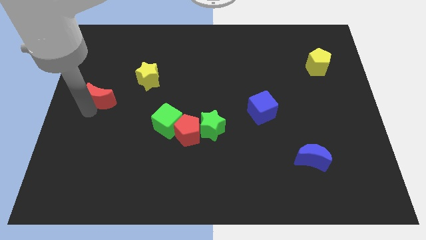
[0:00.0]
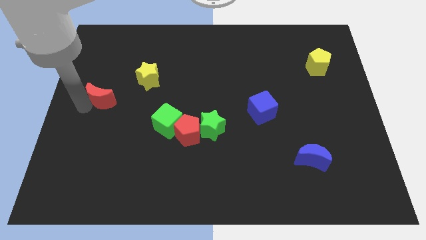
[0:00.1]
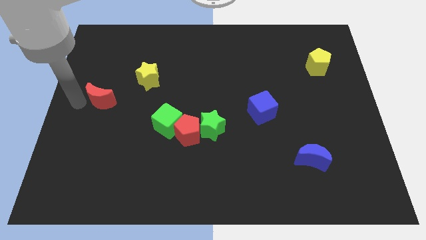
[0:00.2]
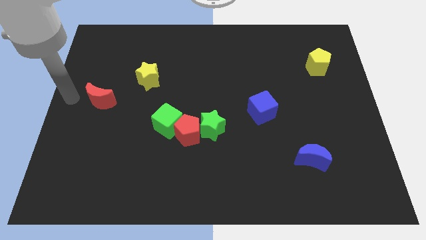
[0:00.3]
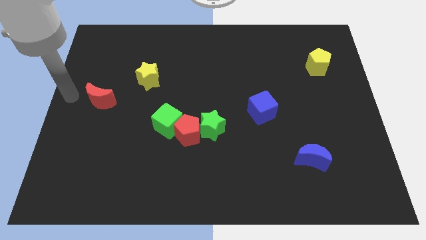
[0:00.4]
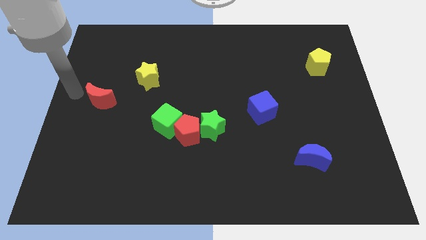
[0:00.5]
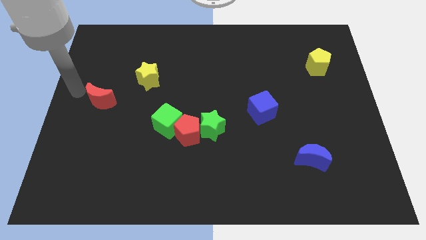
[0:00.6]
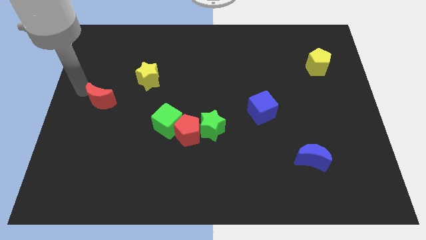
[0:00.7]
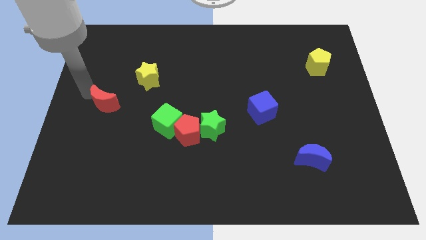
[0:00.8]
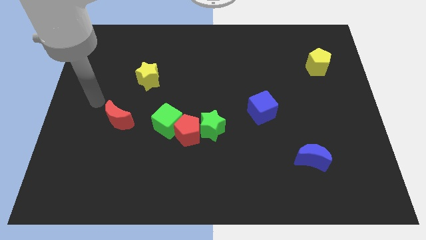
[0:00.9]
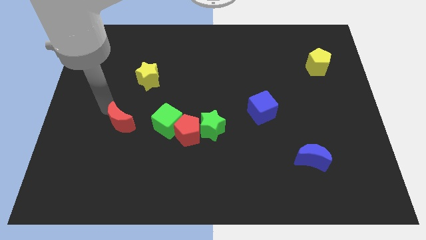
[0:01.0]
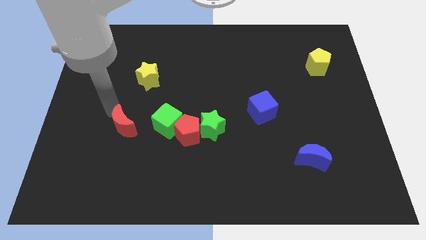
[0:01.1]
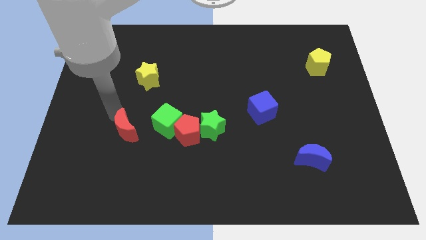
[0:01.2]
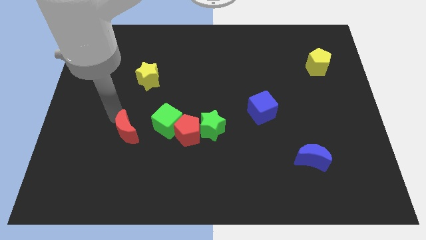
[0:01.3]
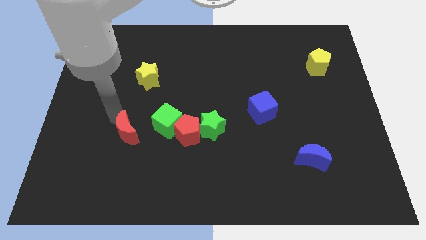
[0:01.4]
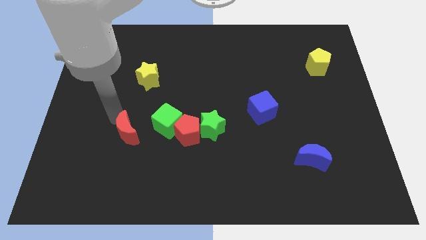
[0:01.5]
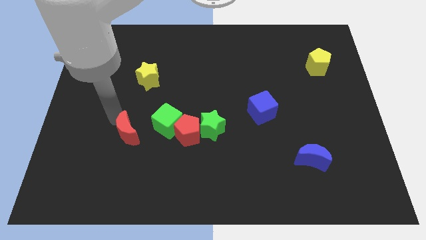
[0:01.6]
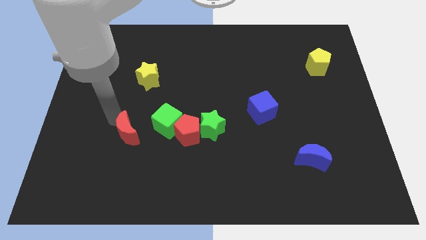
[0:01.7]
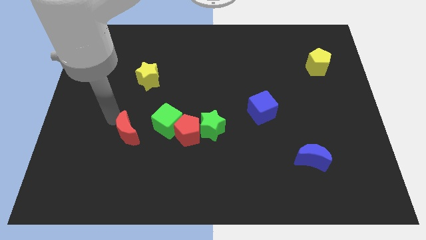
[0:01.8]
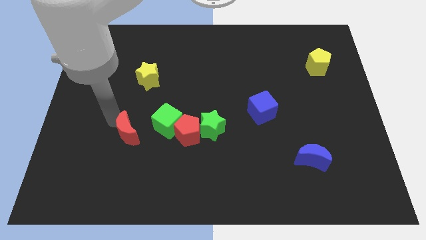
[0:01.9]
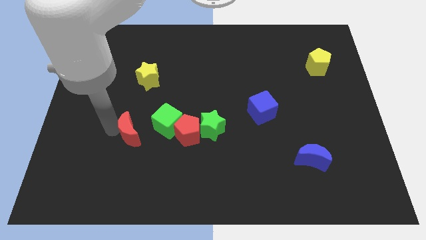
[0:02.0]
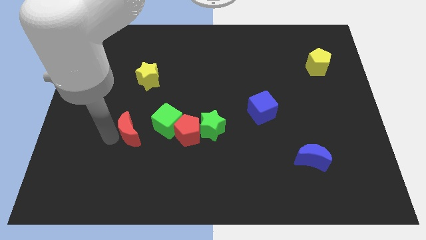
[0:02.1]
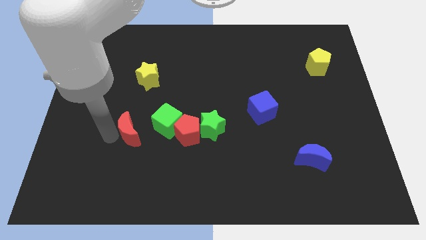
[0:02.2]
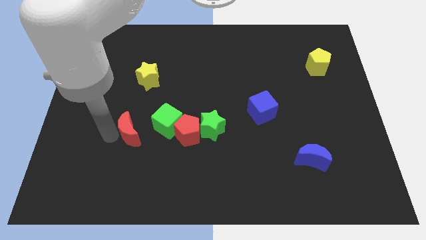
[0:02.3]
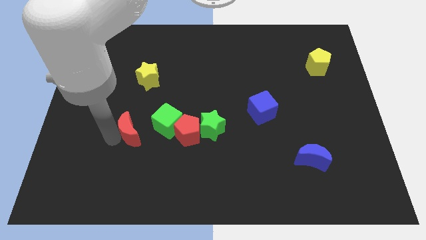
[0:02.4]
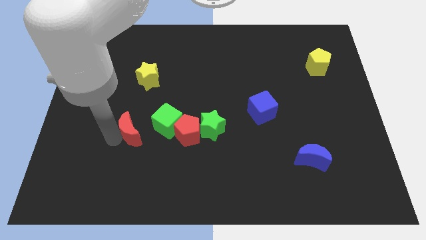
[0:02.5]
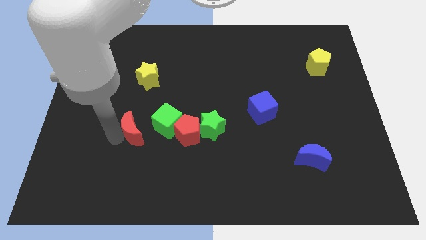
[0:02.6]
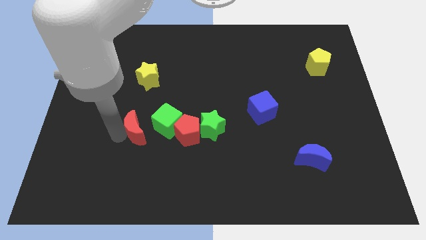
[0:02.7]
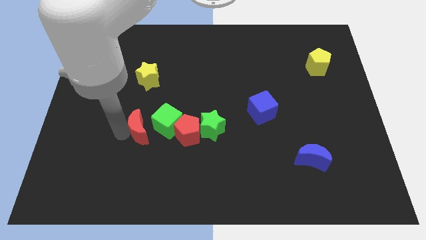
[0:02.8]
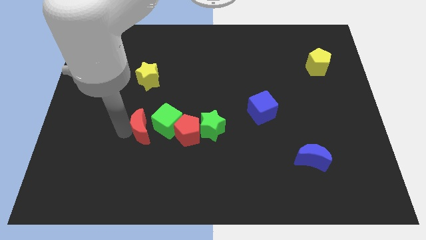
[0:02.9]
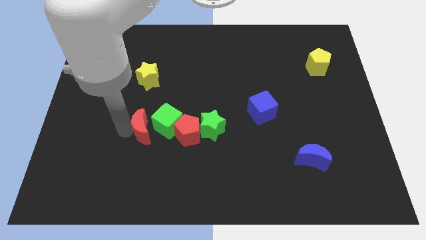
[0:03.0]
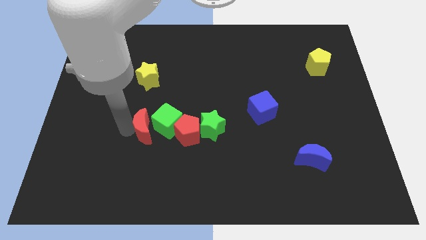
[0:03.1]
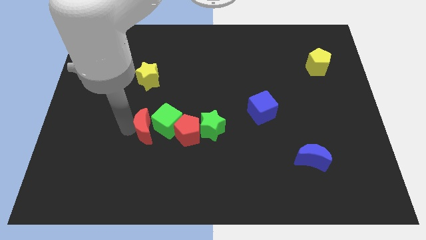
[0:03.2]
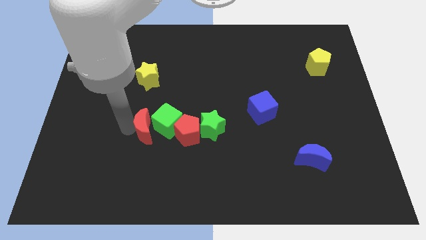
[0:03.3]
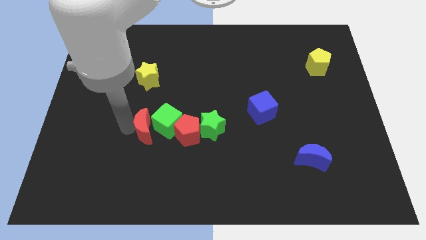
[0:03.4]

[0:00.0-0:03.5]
move the red crescent to the left of the green cube

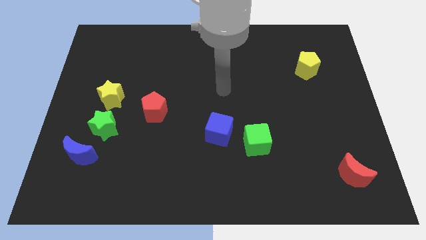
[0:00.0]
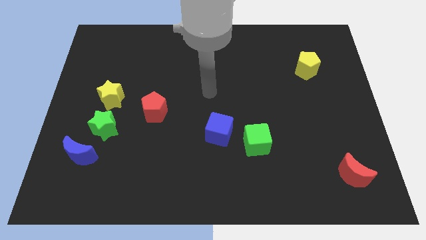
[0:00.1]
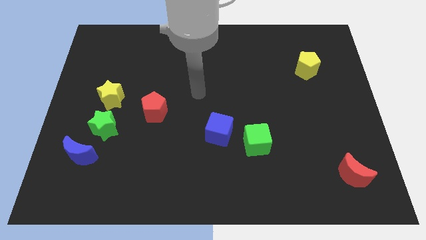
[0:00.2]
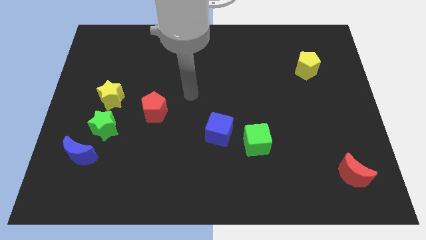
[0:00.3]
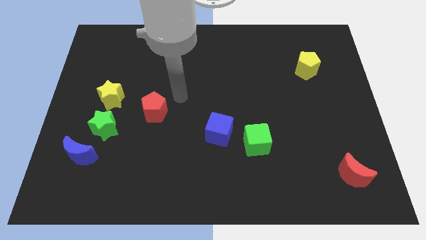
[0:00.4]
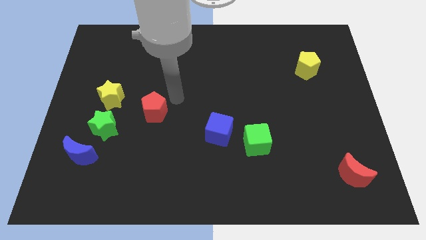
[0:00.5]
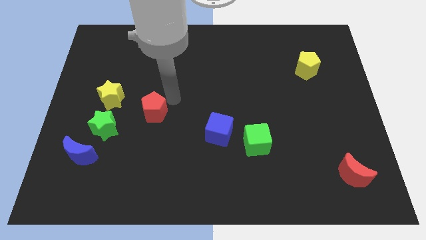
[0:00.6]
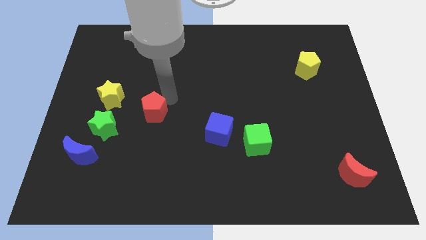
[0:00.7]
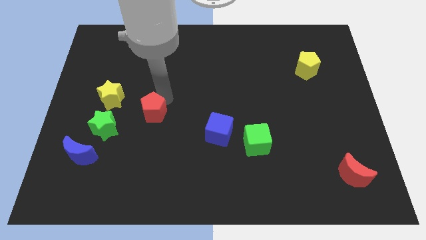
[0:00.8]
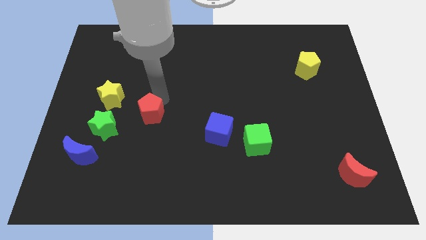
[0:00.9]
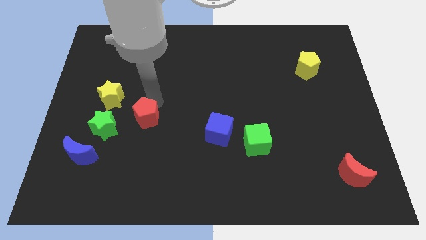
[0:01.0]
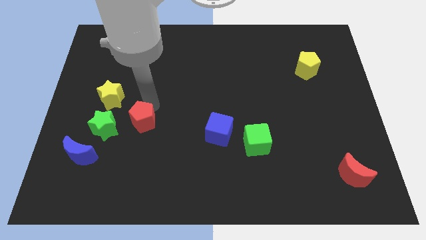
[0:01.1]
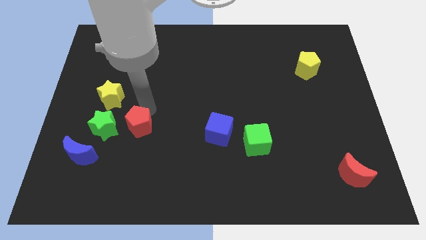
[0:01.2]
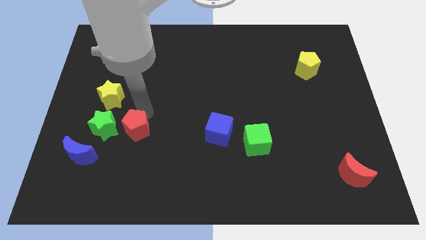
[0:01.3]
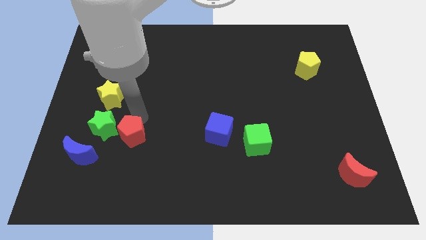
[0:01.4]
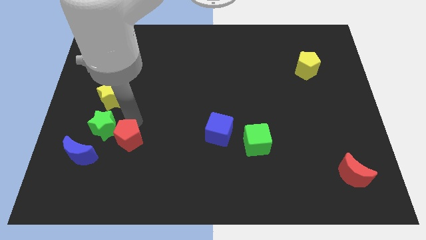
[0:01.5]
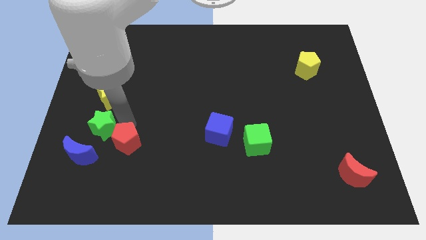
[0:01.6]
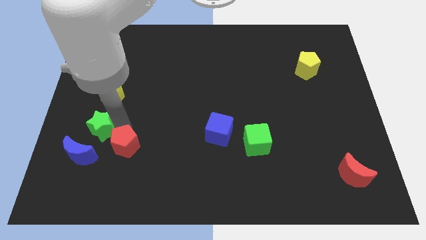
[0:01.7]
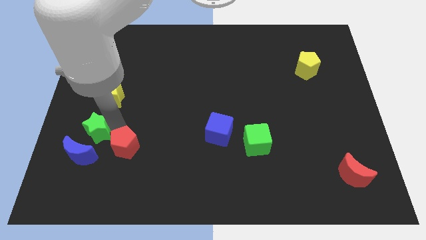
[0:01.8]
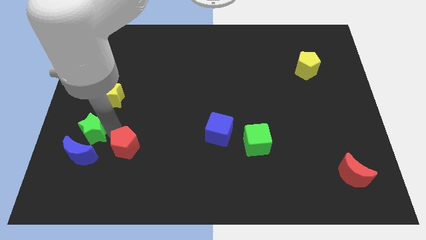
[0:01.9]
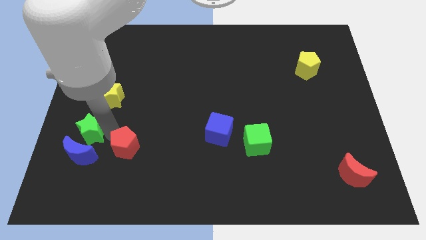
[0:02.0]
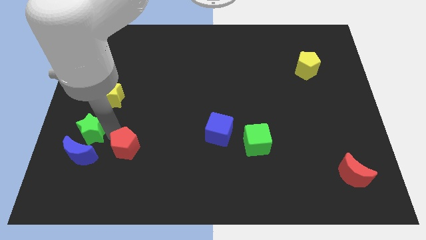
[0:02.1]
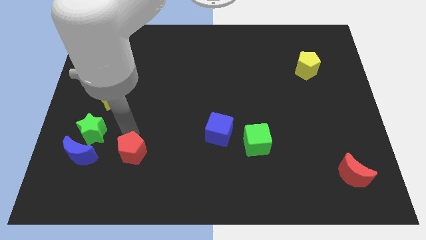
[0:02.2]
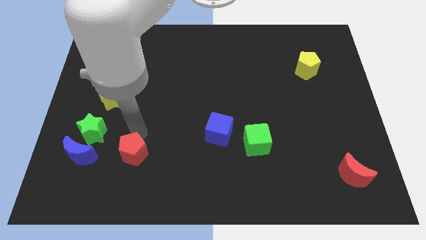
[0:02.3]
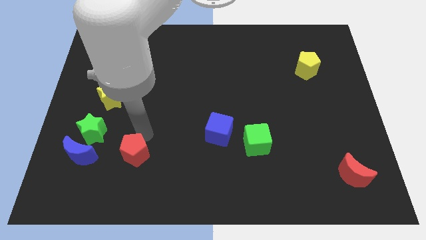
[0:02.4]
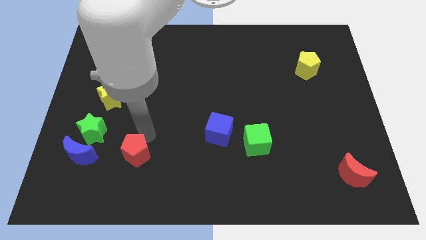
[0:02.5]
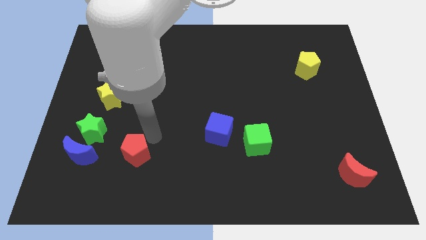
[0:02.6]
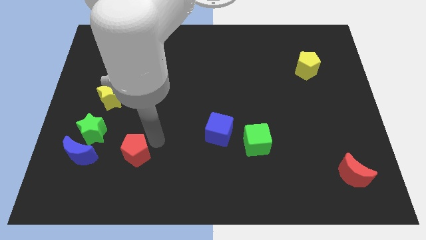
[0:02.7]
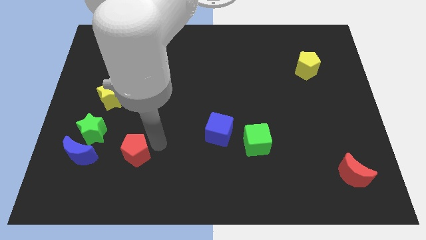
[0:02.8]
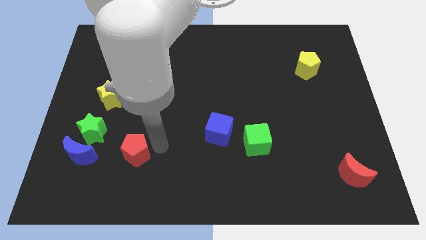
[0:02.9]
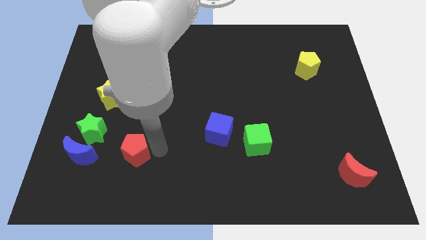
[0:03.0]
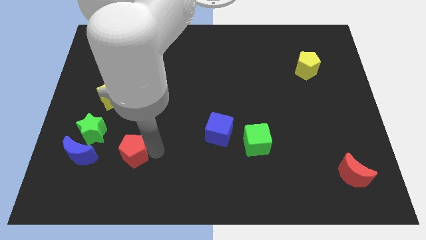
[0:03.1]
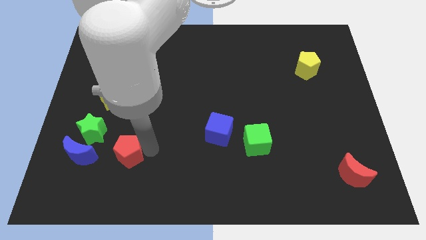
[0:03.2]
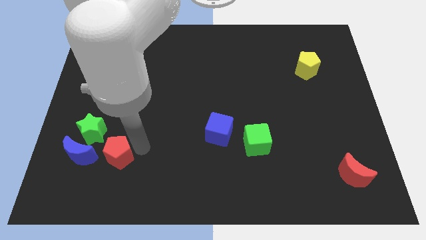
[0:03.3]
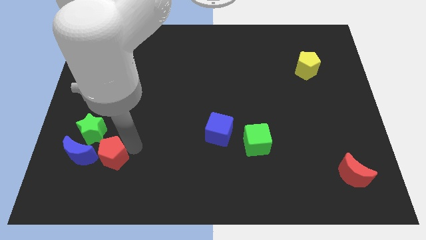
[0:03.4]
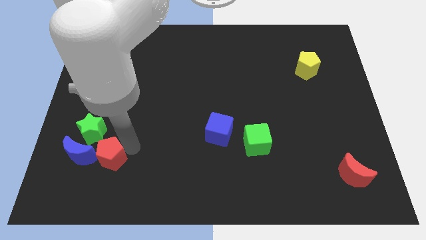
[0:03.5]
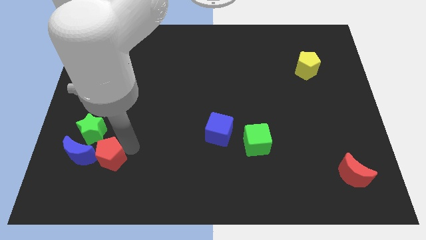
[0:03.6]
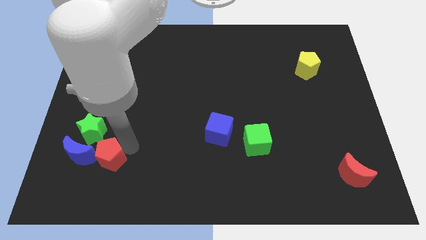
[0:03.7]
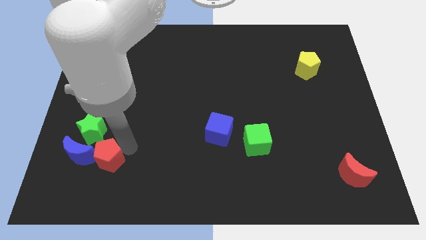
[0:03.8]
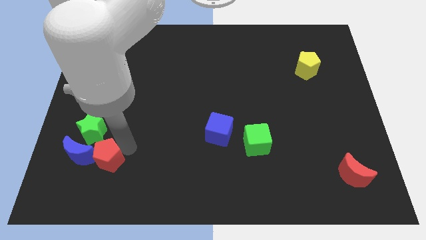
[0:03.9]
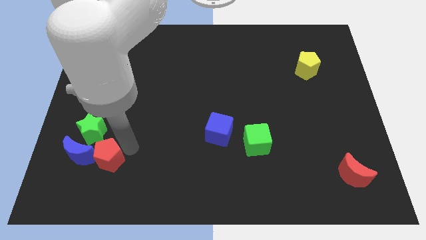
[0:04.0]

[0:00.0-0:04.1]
push the red pentagon to the right of the blue crescent

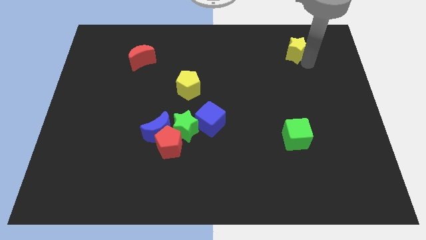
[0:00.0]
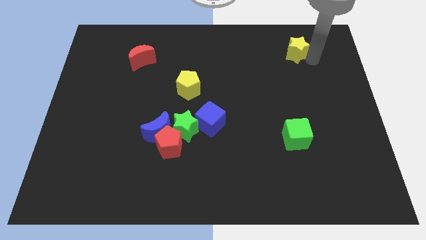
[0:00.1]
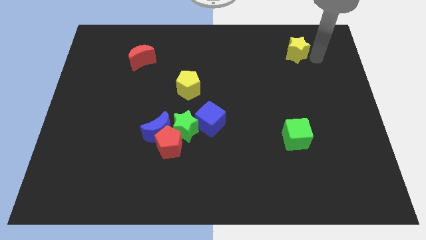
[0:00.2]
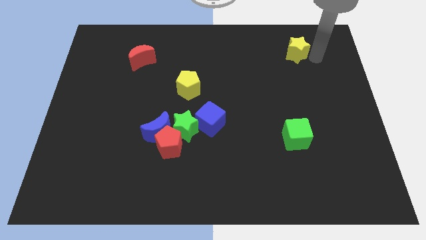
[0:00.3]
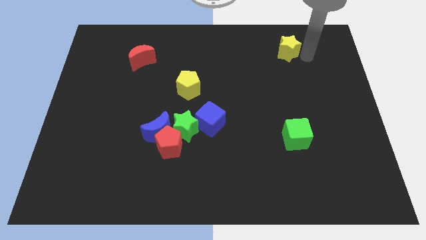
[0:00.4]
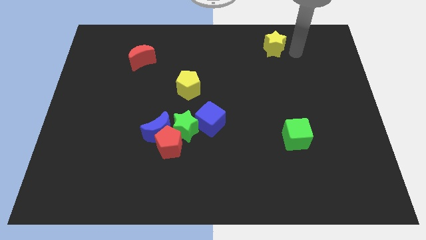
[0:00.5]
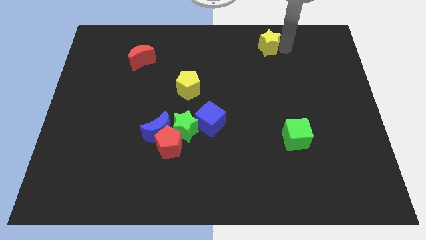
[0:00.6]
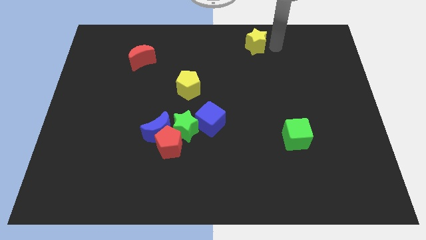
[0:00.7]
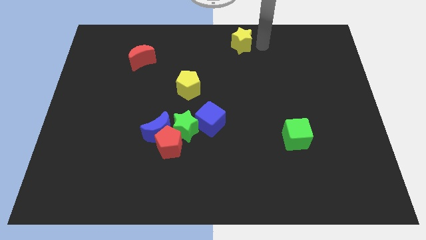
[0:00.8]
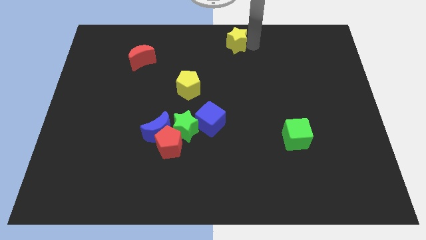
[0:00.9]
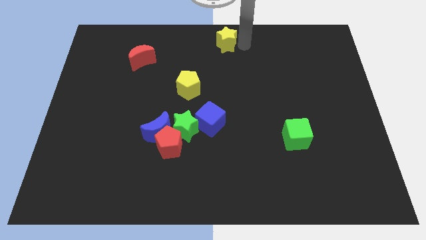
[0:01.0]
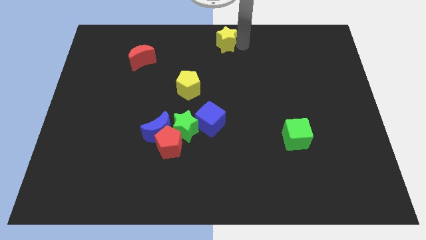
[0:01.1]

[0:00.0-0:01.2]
place the yellow star at top center of the board

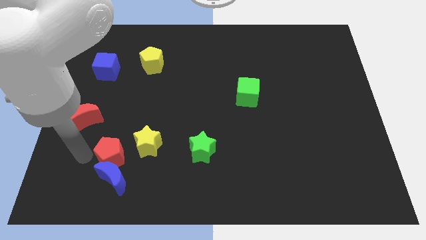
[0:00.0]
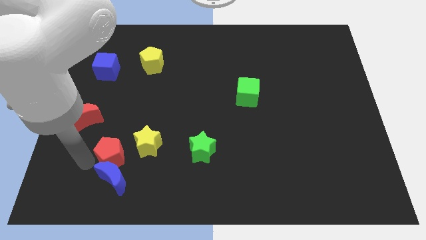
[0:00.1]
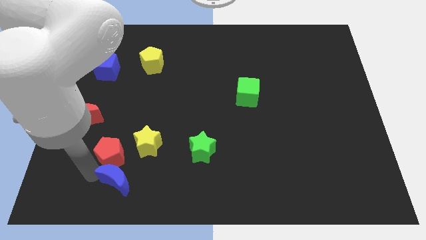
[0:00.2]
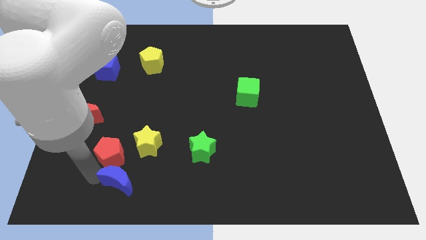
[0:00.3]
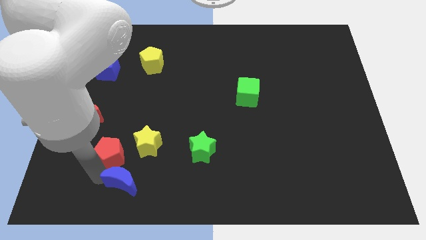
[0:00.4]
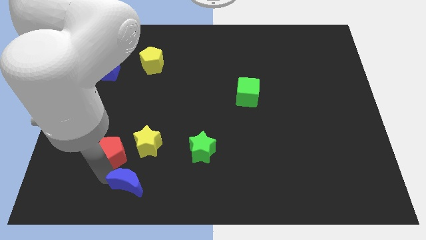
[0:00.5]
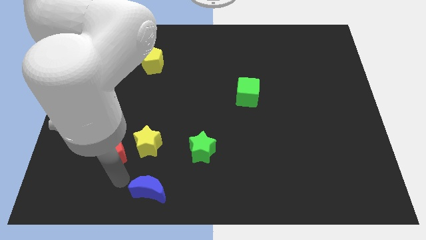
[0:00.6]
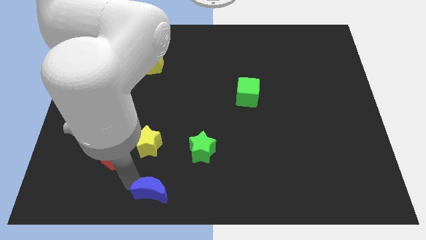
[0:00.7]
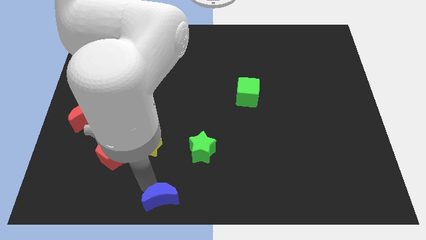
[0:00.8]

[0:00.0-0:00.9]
place the blue crescent below the yellow star
